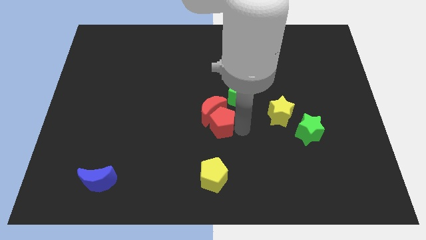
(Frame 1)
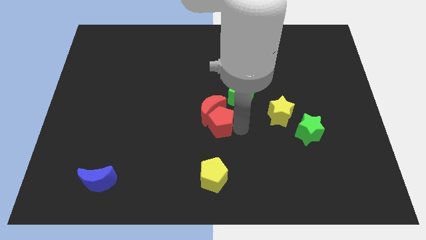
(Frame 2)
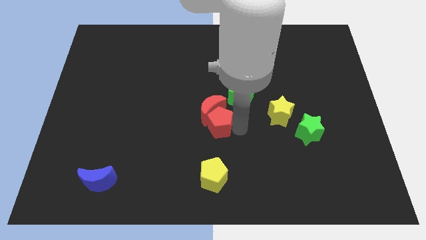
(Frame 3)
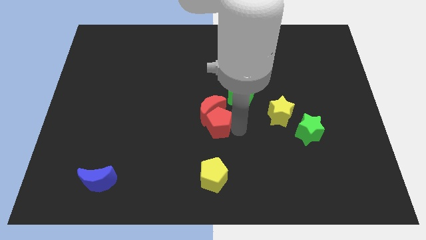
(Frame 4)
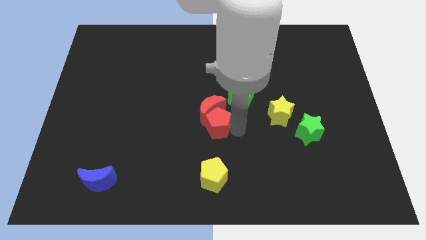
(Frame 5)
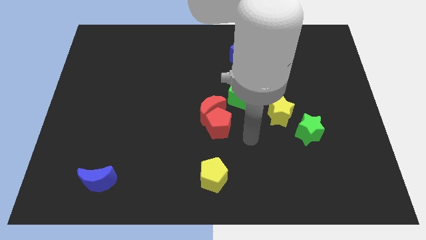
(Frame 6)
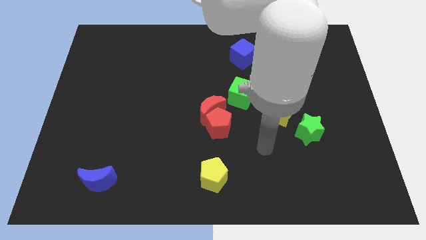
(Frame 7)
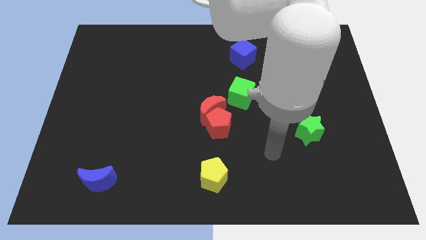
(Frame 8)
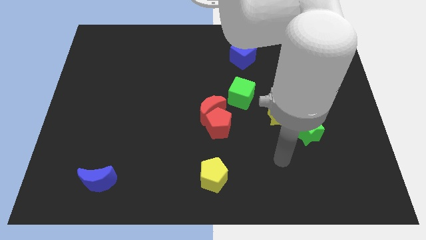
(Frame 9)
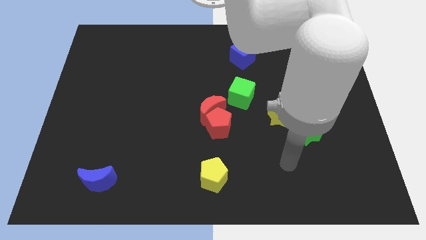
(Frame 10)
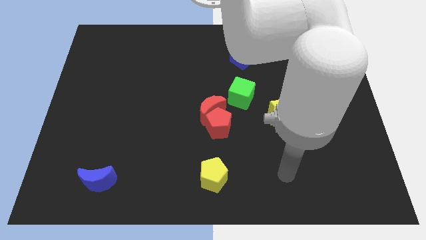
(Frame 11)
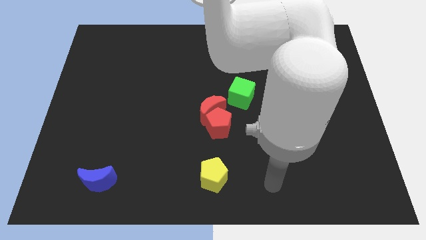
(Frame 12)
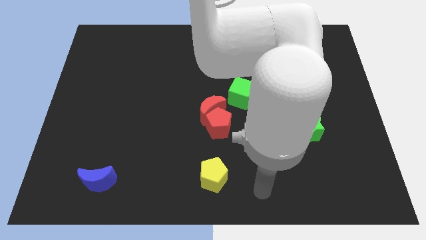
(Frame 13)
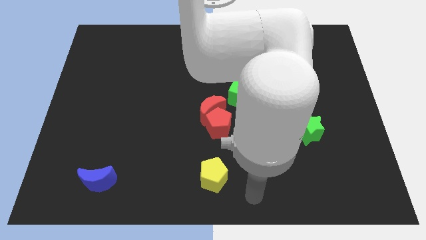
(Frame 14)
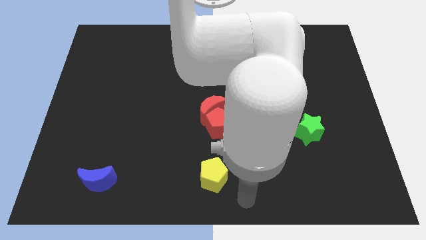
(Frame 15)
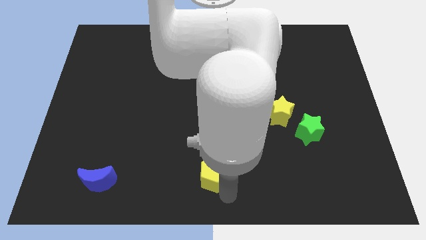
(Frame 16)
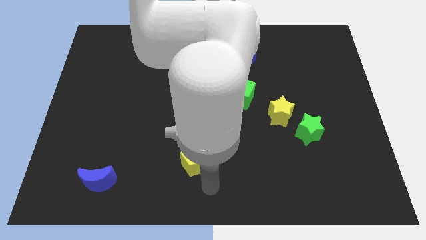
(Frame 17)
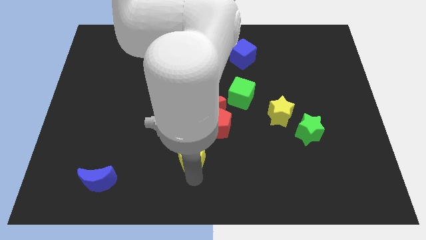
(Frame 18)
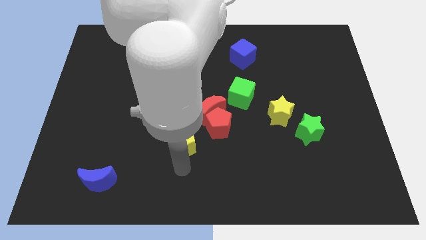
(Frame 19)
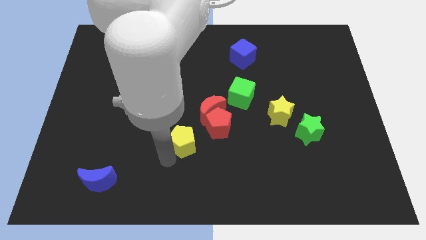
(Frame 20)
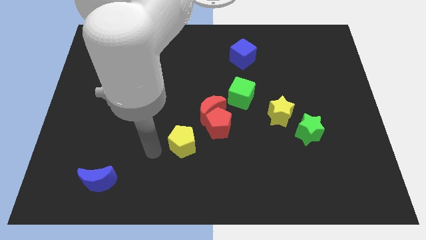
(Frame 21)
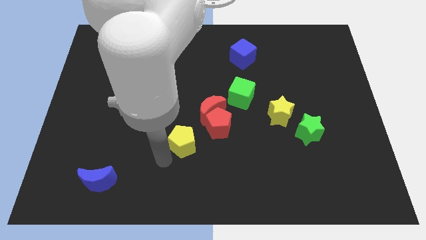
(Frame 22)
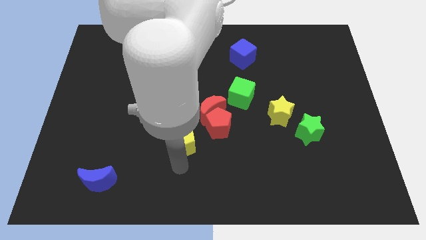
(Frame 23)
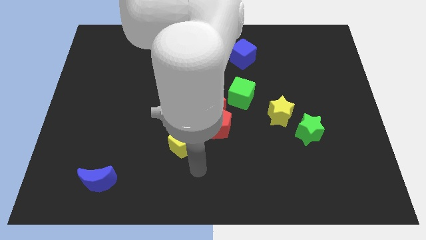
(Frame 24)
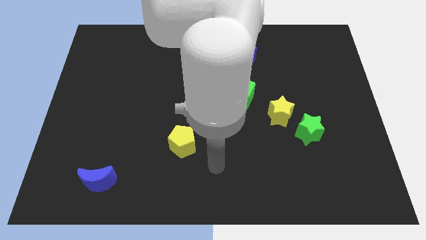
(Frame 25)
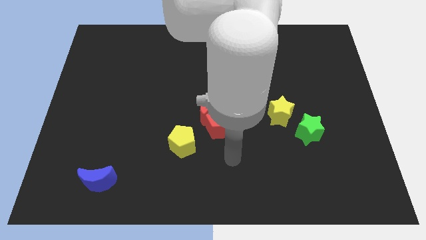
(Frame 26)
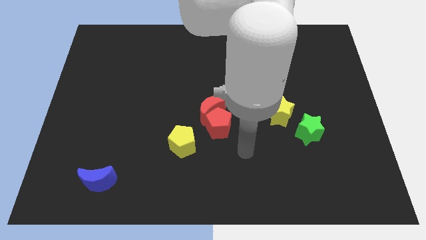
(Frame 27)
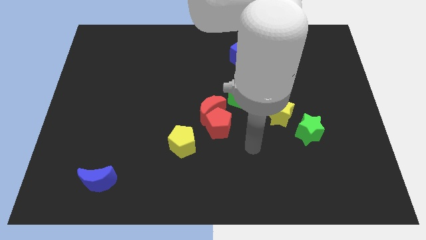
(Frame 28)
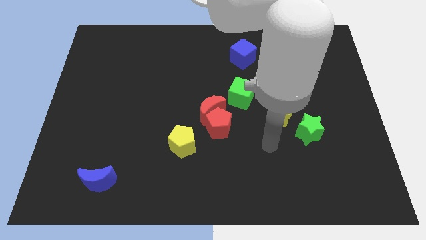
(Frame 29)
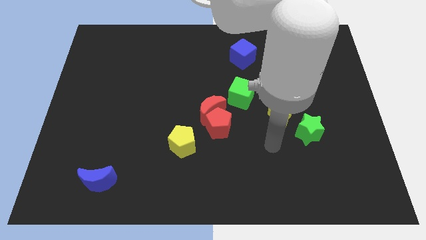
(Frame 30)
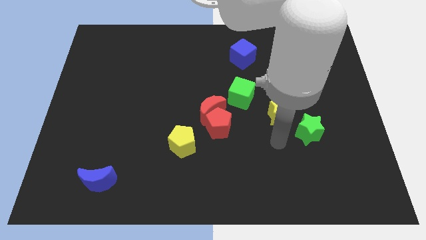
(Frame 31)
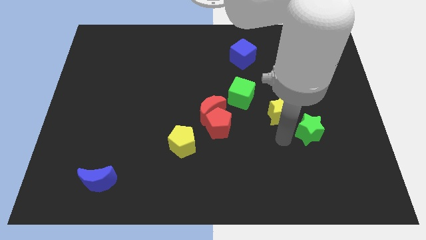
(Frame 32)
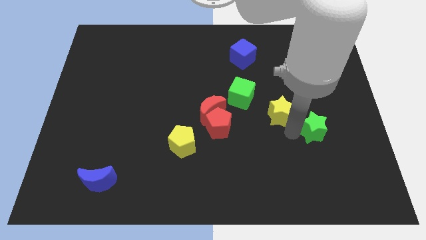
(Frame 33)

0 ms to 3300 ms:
place the yellow pentagon between the red pentagon and blue moon

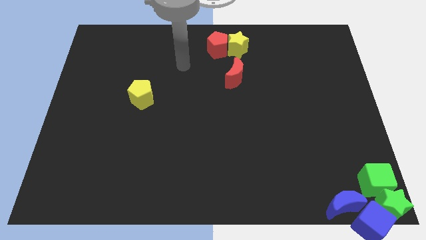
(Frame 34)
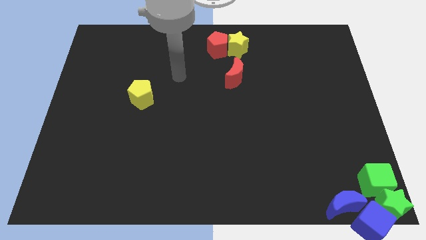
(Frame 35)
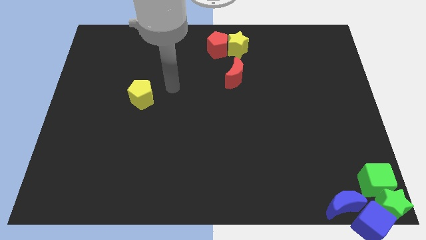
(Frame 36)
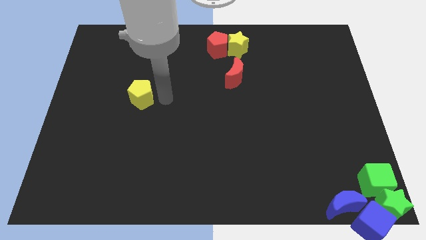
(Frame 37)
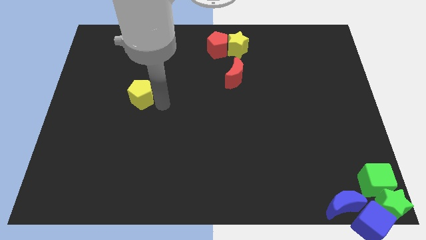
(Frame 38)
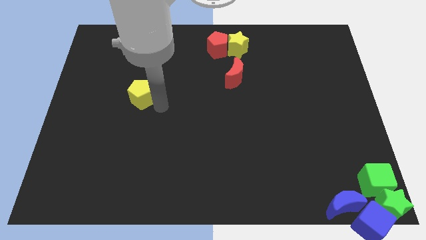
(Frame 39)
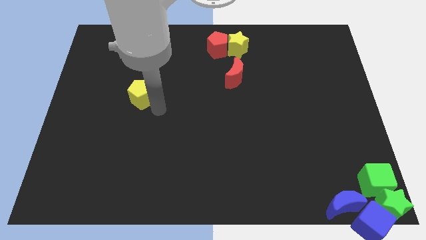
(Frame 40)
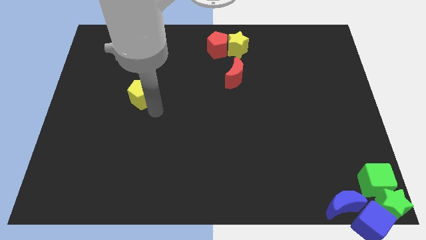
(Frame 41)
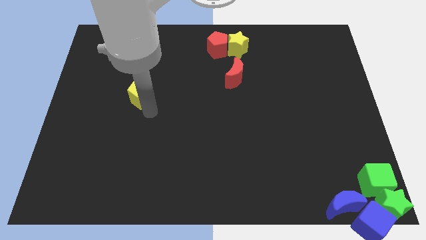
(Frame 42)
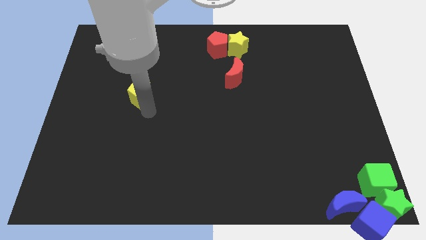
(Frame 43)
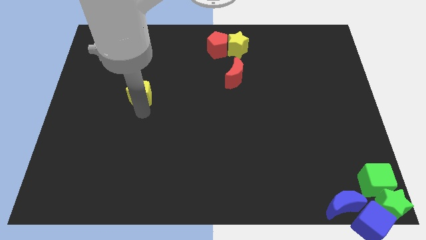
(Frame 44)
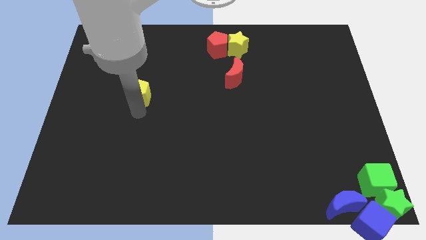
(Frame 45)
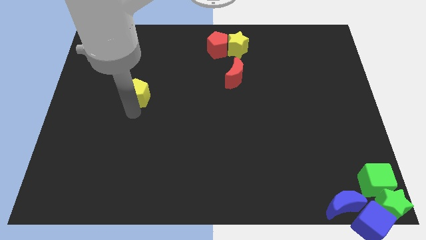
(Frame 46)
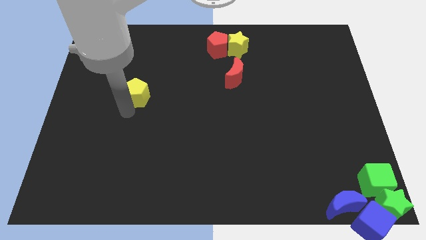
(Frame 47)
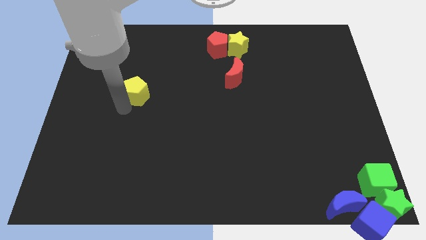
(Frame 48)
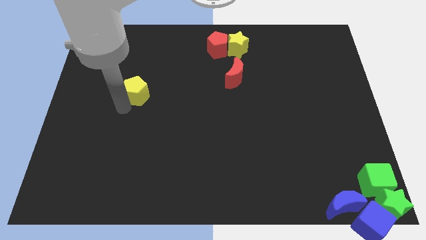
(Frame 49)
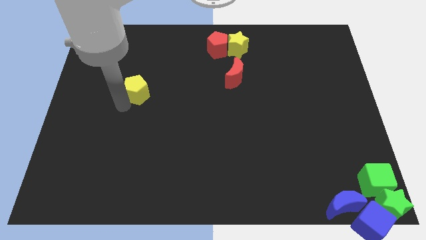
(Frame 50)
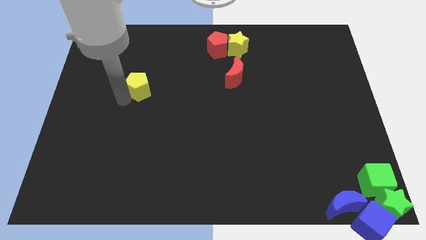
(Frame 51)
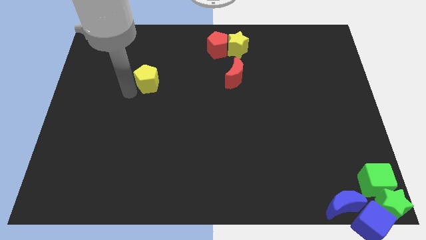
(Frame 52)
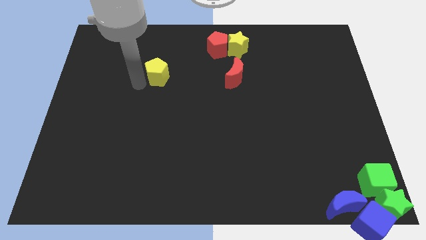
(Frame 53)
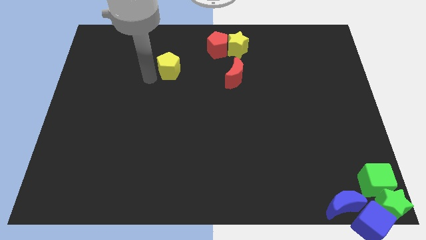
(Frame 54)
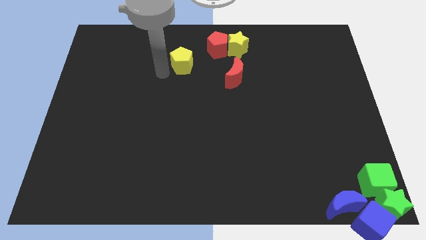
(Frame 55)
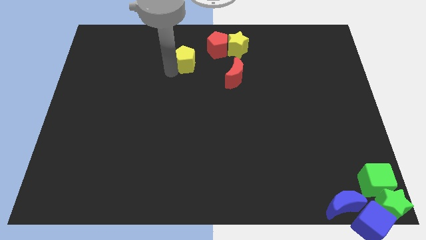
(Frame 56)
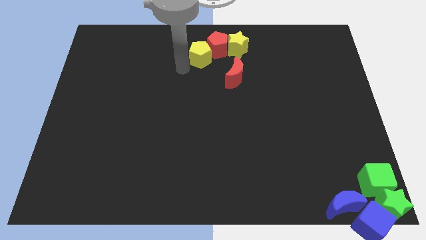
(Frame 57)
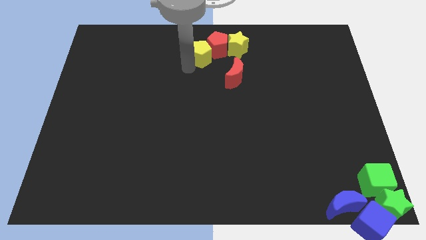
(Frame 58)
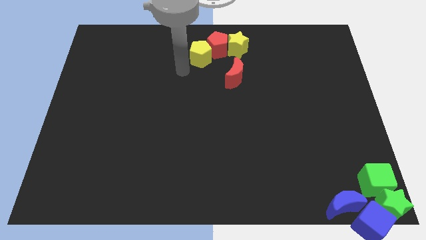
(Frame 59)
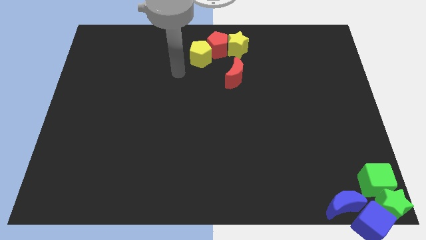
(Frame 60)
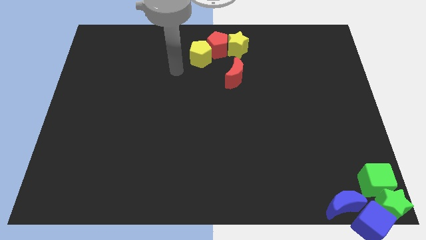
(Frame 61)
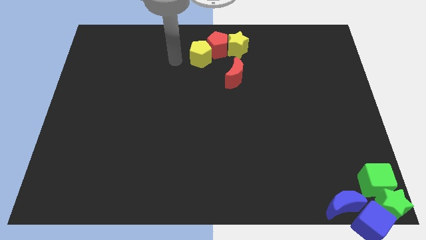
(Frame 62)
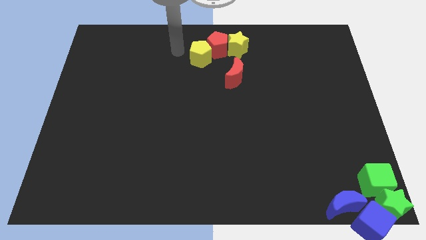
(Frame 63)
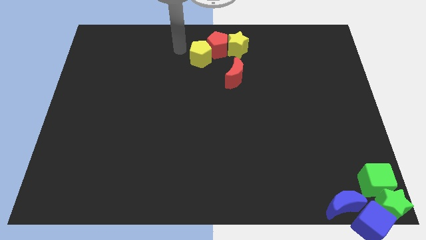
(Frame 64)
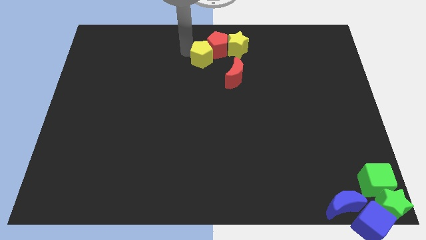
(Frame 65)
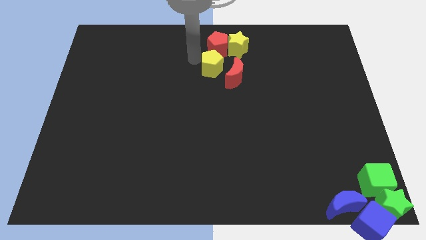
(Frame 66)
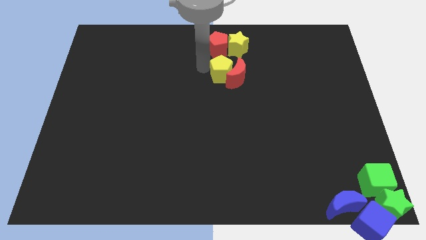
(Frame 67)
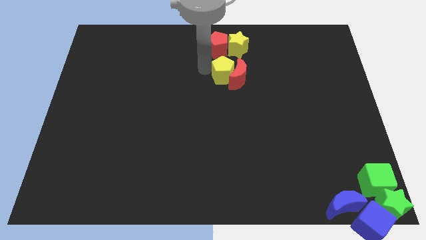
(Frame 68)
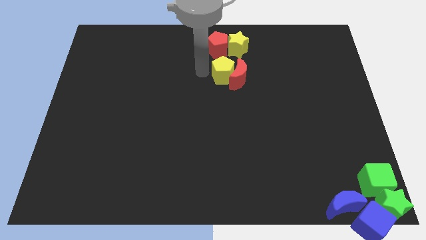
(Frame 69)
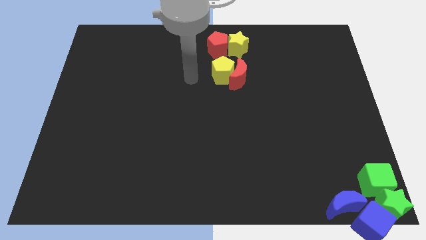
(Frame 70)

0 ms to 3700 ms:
push the yellow pentagon into the red crescent

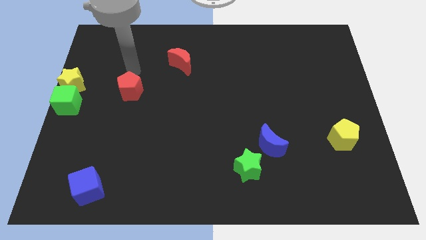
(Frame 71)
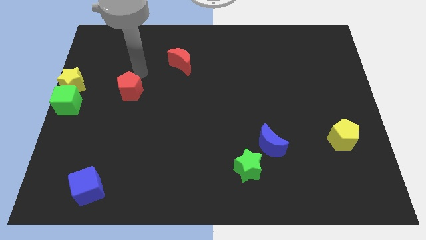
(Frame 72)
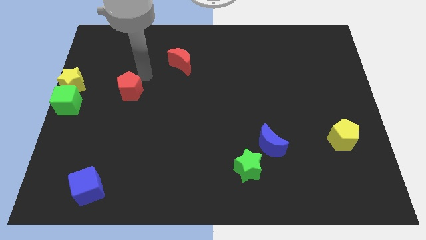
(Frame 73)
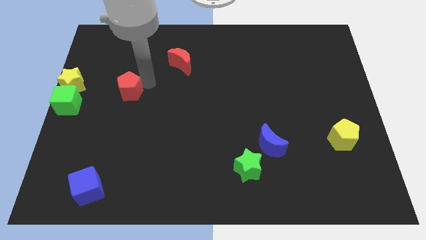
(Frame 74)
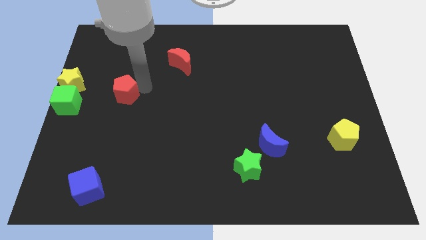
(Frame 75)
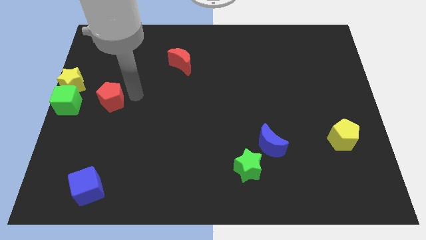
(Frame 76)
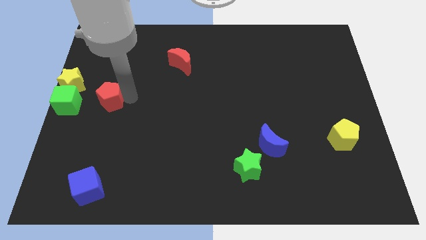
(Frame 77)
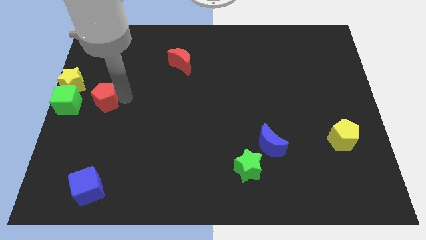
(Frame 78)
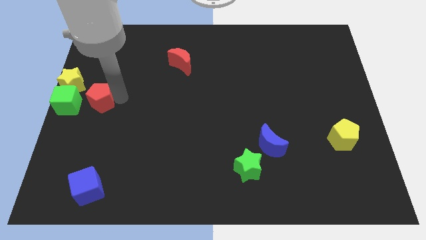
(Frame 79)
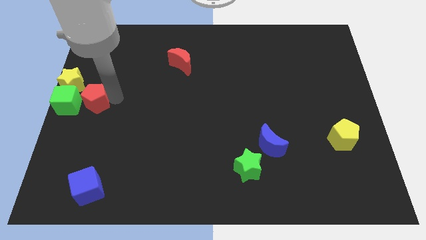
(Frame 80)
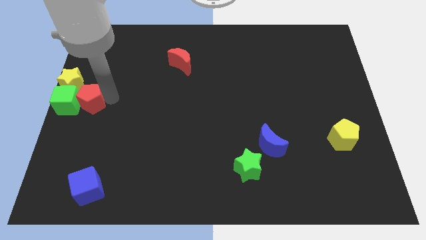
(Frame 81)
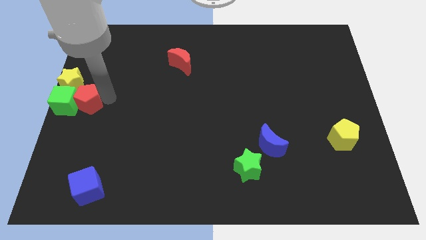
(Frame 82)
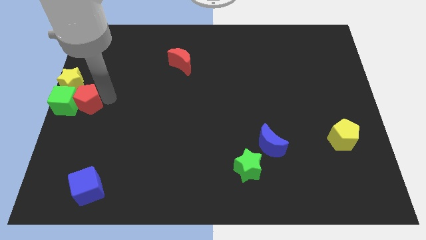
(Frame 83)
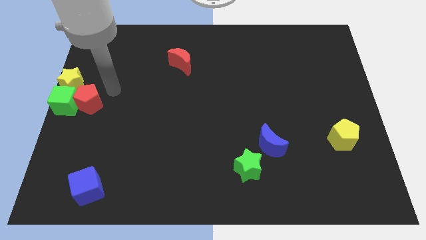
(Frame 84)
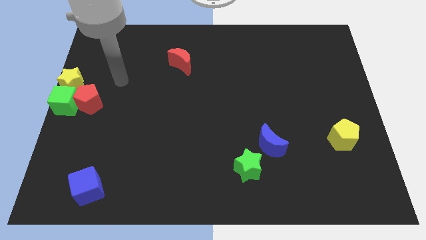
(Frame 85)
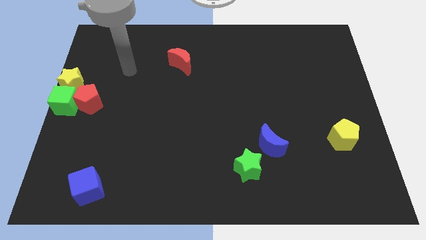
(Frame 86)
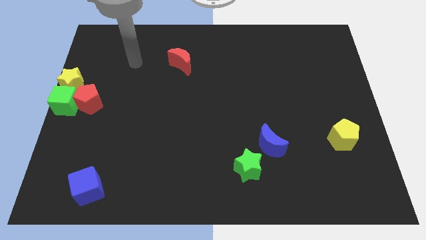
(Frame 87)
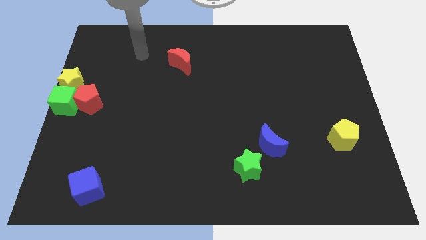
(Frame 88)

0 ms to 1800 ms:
place the red pentagon right to the green cube

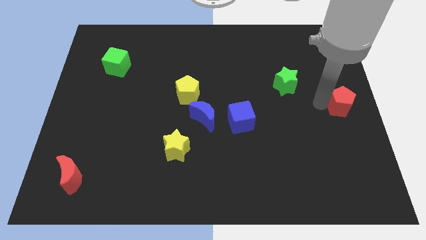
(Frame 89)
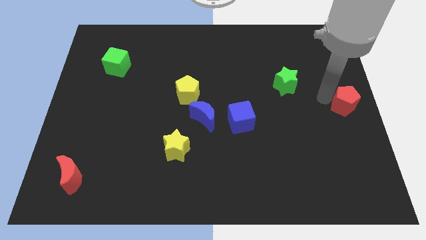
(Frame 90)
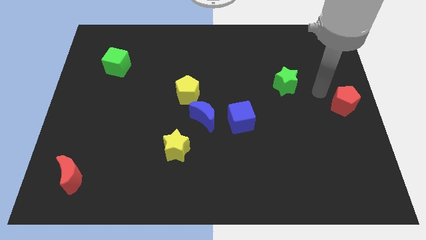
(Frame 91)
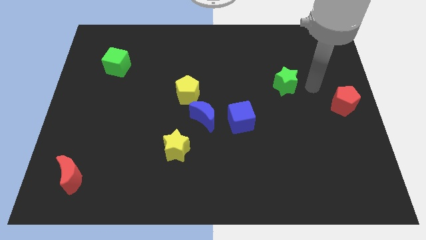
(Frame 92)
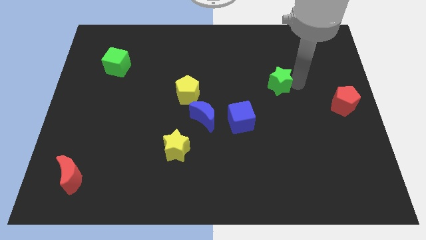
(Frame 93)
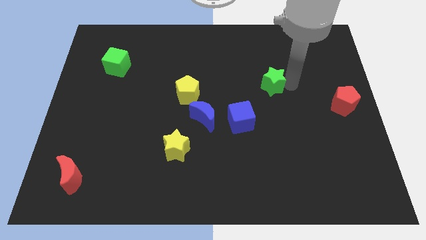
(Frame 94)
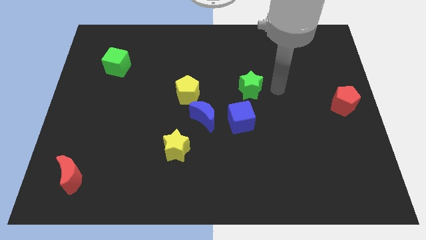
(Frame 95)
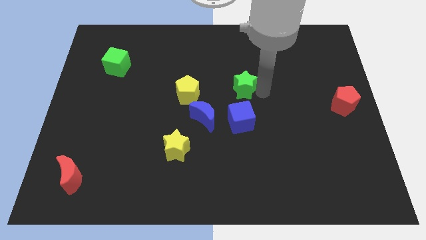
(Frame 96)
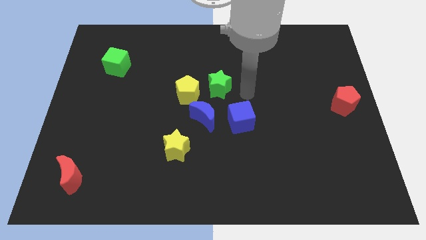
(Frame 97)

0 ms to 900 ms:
push green star towards yellow pentagon
